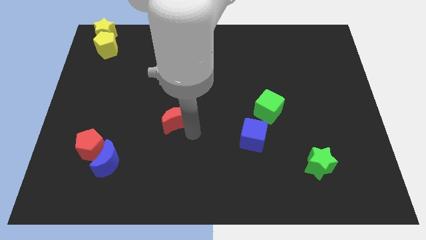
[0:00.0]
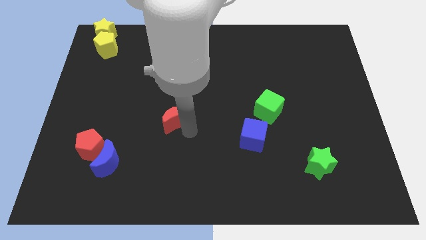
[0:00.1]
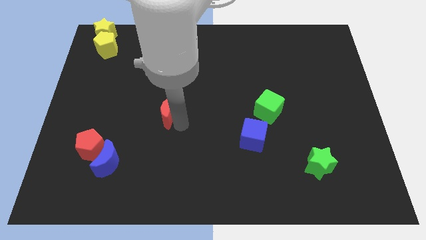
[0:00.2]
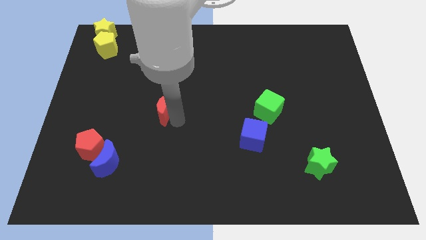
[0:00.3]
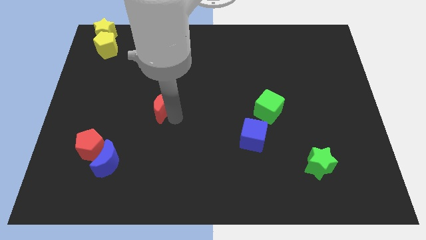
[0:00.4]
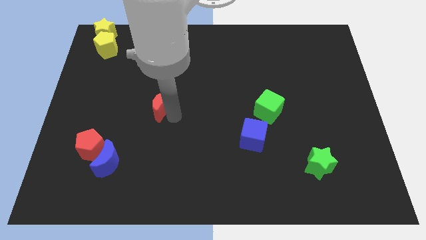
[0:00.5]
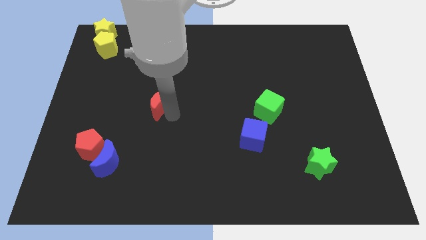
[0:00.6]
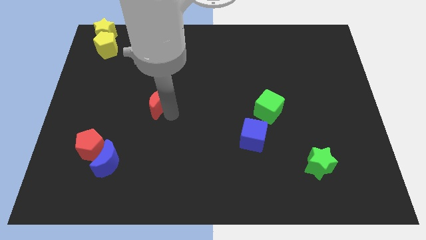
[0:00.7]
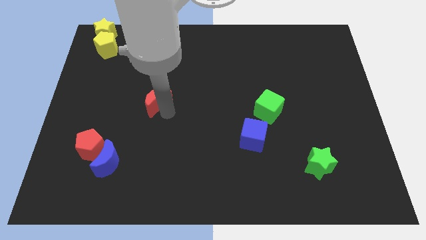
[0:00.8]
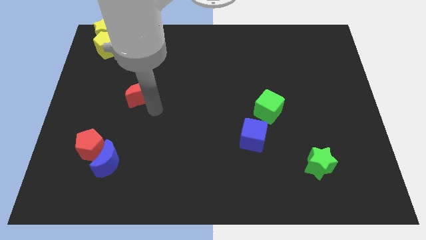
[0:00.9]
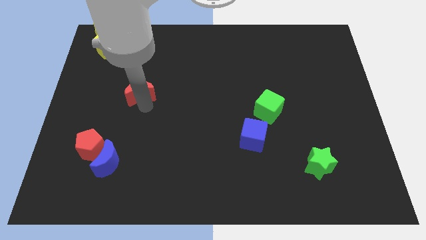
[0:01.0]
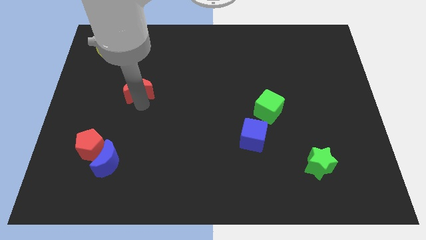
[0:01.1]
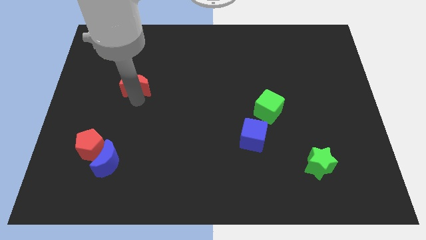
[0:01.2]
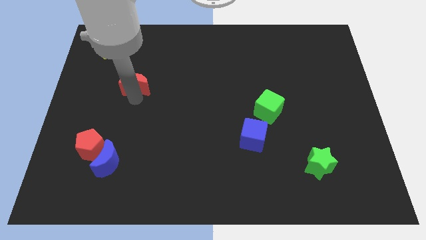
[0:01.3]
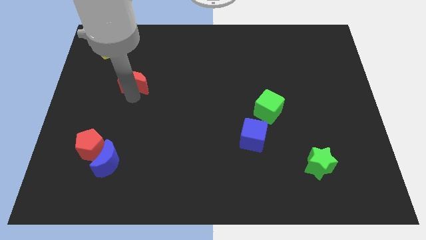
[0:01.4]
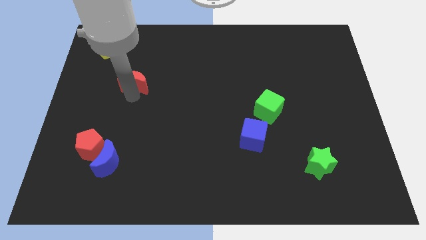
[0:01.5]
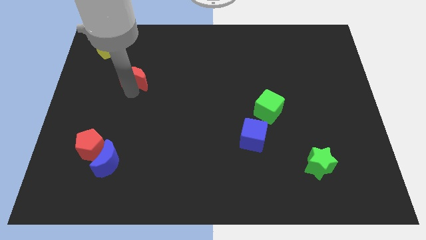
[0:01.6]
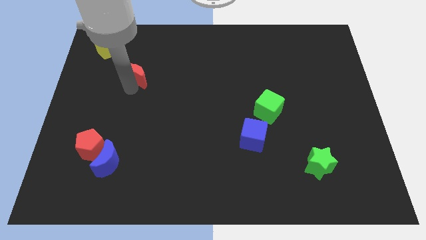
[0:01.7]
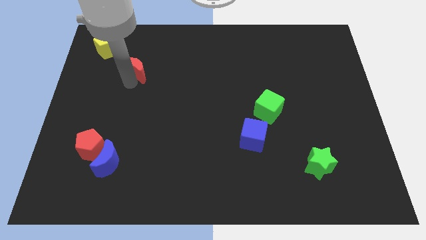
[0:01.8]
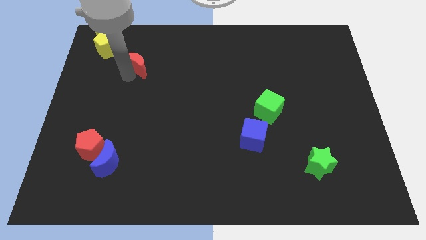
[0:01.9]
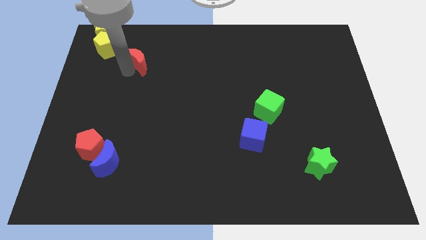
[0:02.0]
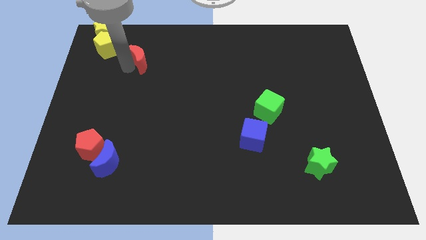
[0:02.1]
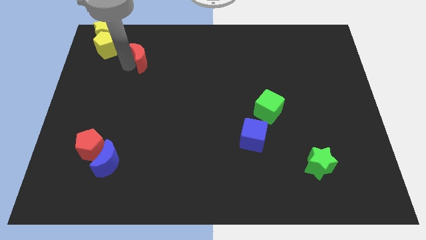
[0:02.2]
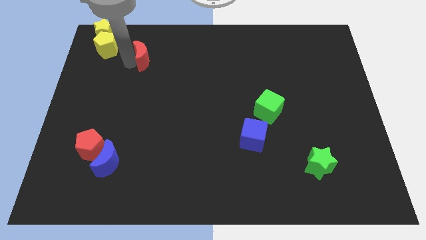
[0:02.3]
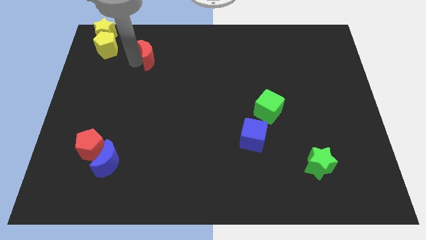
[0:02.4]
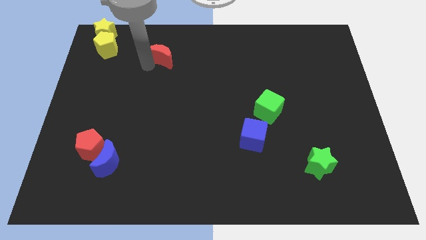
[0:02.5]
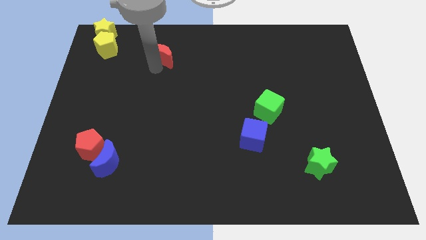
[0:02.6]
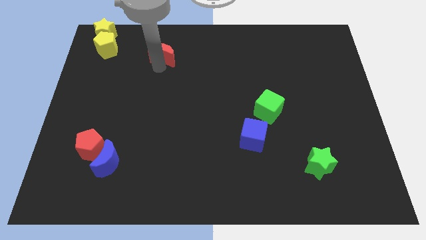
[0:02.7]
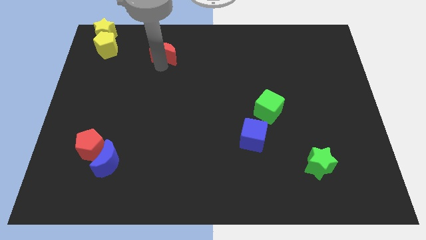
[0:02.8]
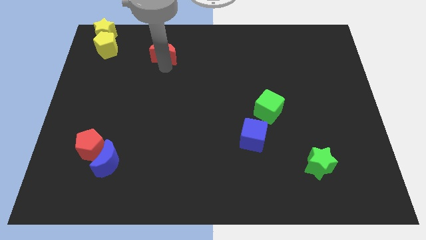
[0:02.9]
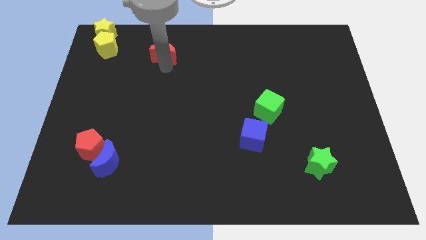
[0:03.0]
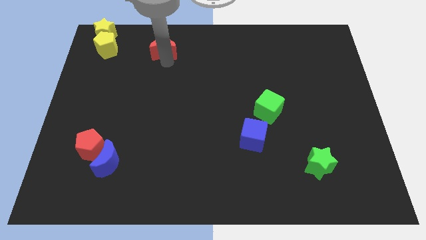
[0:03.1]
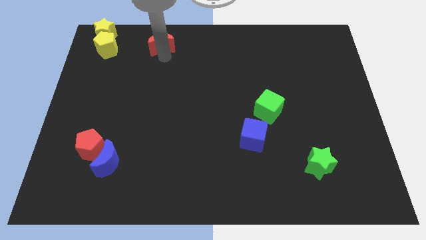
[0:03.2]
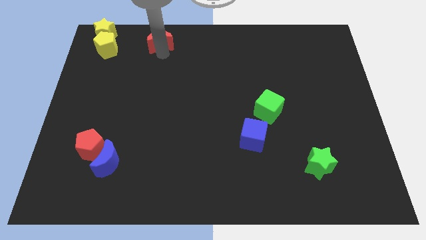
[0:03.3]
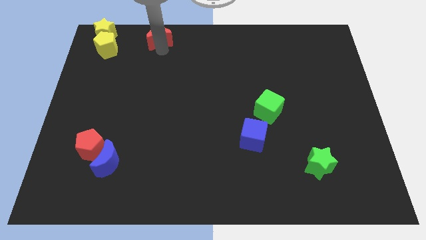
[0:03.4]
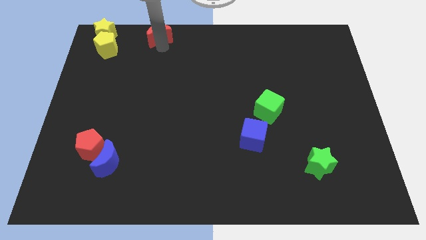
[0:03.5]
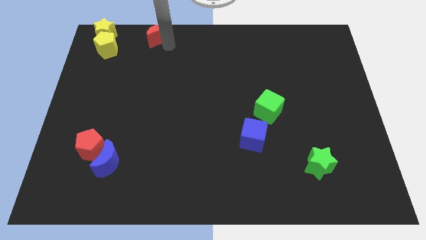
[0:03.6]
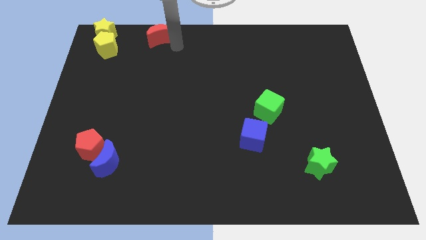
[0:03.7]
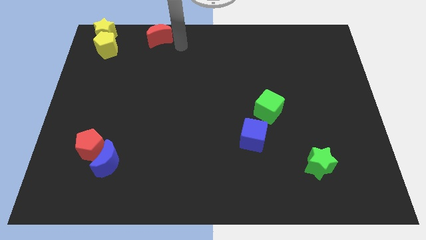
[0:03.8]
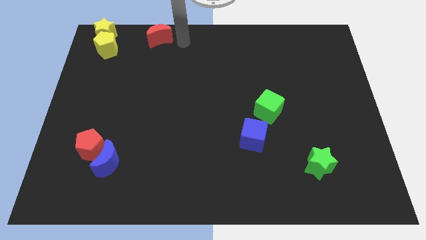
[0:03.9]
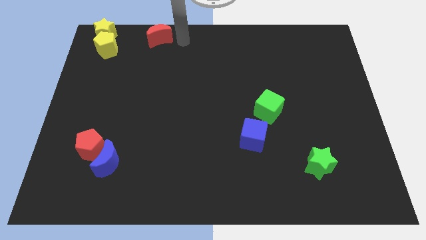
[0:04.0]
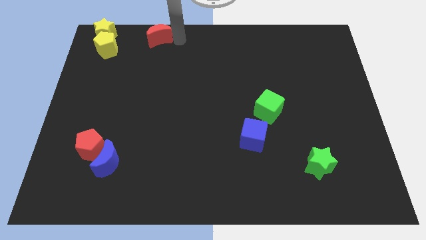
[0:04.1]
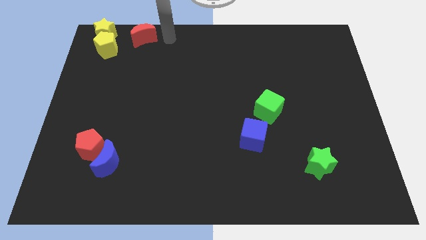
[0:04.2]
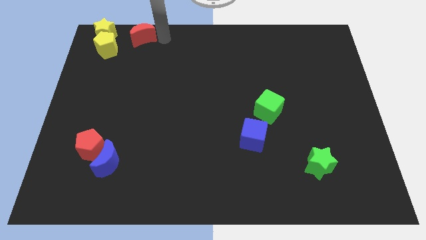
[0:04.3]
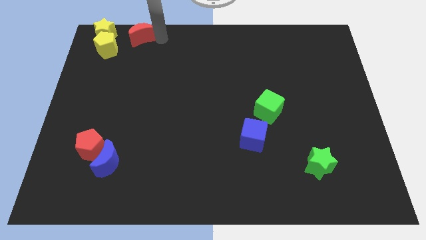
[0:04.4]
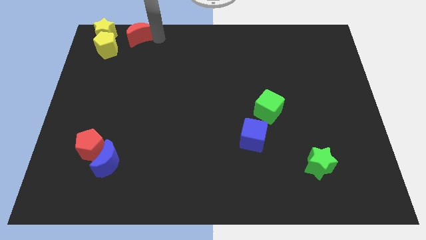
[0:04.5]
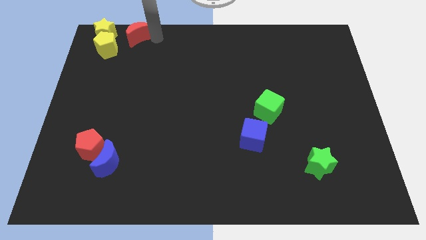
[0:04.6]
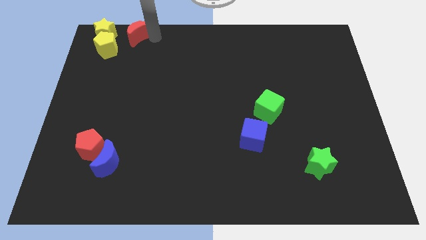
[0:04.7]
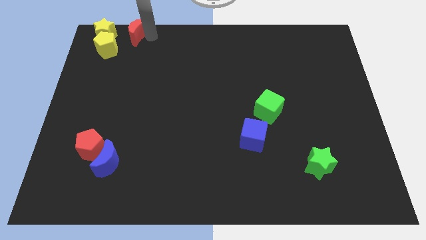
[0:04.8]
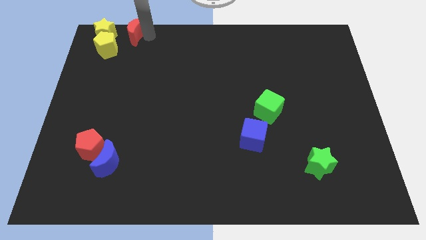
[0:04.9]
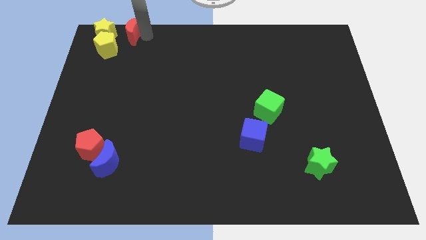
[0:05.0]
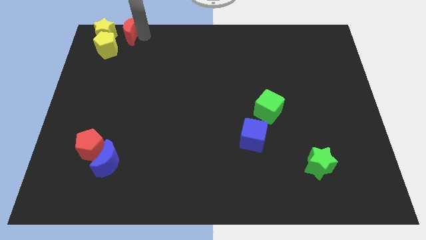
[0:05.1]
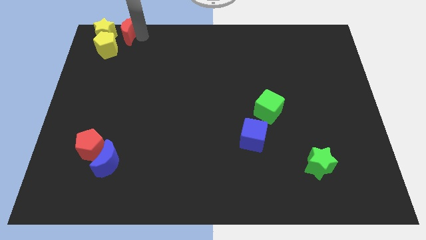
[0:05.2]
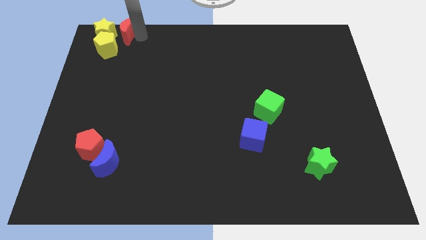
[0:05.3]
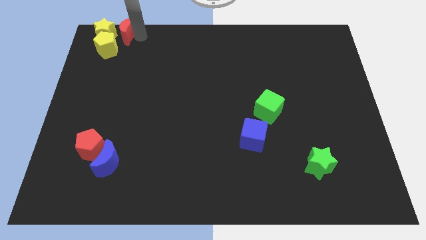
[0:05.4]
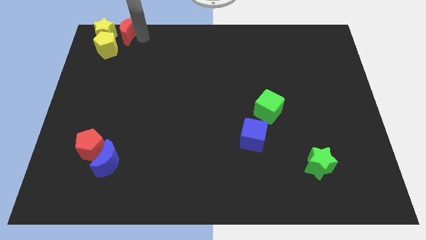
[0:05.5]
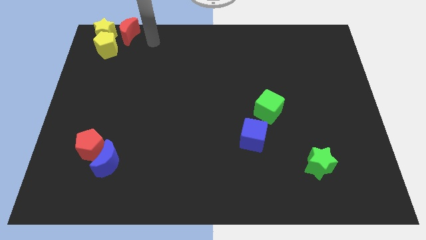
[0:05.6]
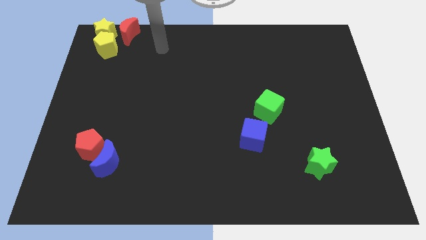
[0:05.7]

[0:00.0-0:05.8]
push the red crecent to the right side of the yellow star

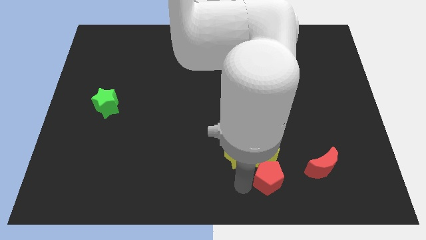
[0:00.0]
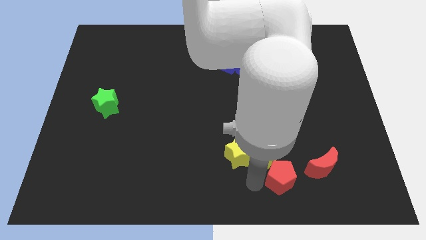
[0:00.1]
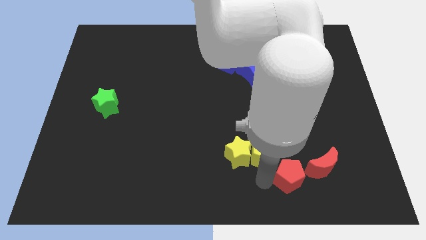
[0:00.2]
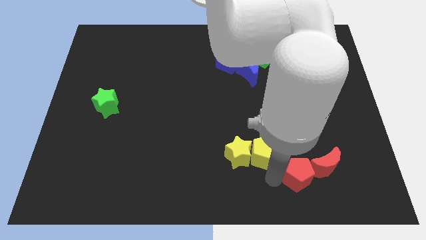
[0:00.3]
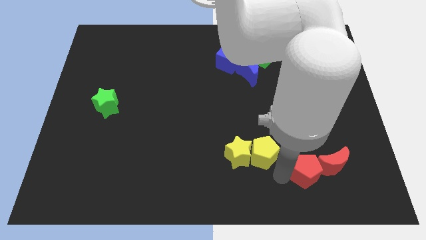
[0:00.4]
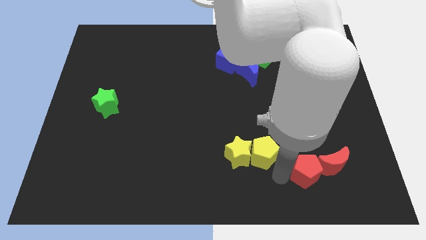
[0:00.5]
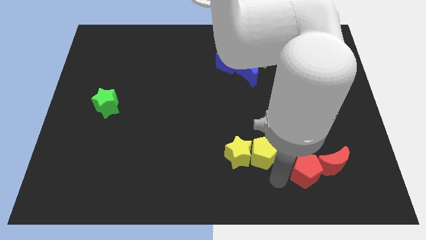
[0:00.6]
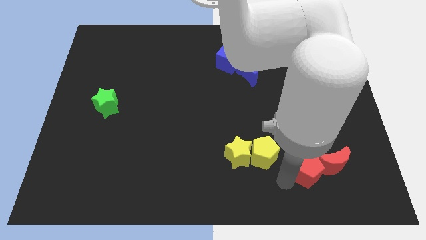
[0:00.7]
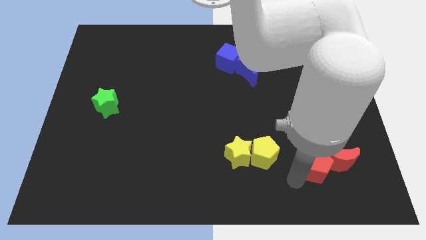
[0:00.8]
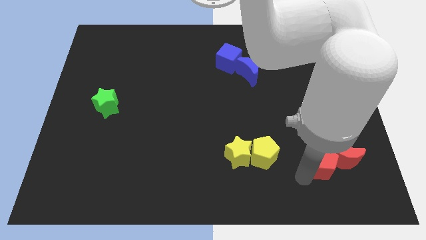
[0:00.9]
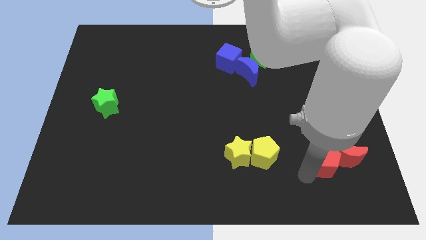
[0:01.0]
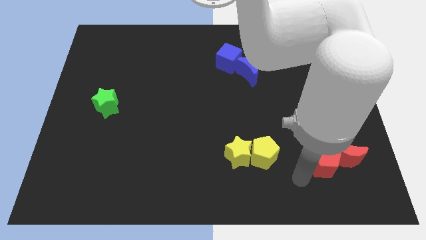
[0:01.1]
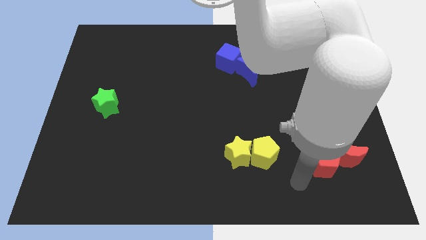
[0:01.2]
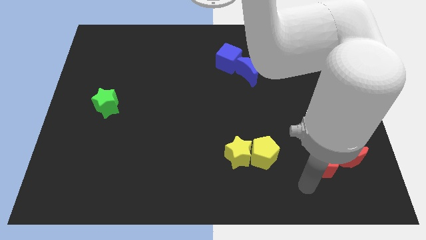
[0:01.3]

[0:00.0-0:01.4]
move red pentagon and red crescent to the bottom right side of the table

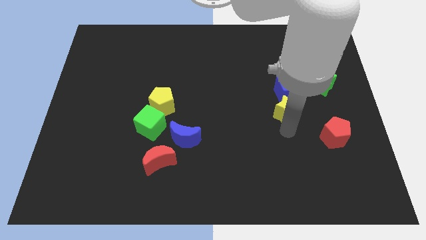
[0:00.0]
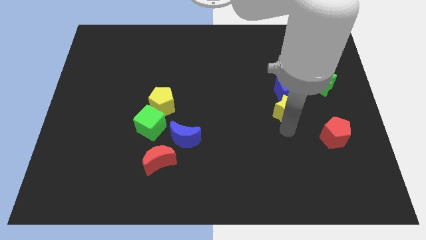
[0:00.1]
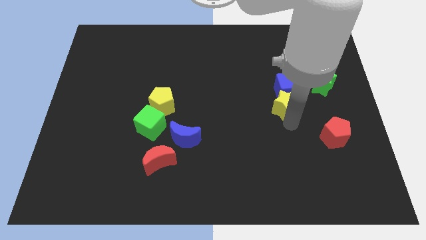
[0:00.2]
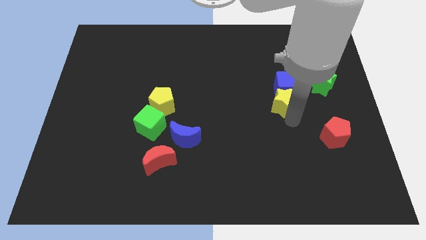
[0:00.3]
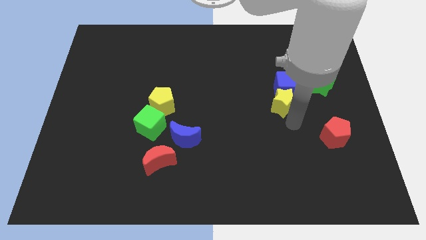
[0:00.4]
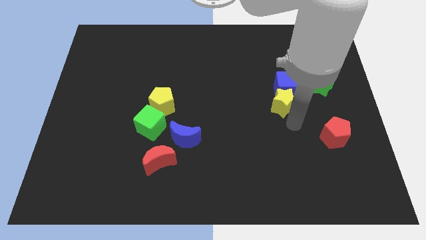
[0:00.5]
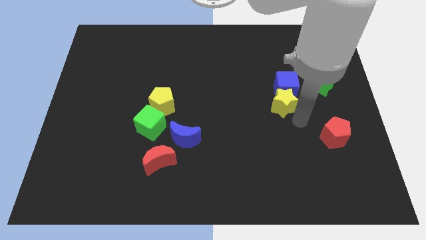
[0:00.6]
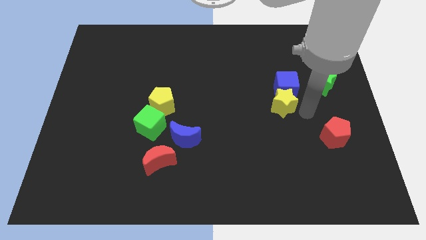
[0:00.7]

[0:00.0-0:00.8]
touch the bottom of yellow star

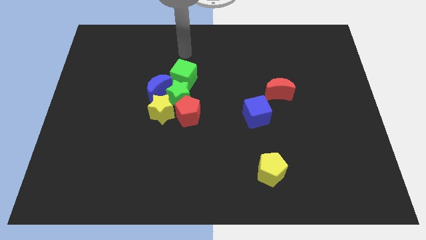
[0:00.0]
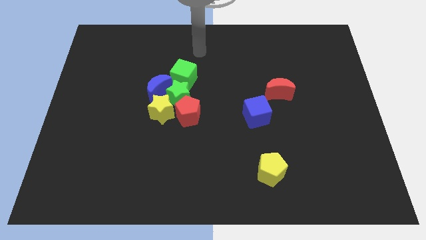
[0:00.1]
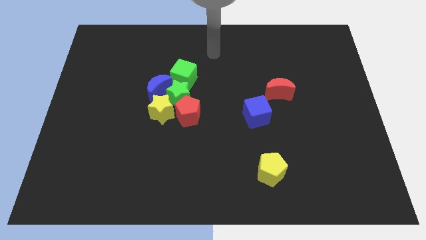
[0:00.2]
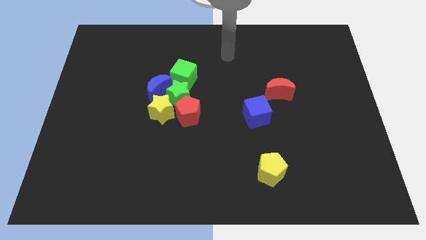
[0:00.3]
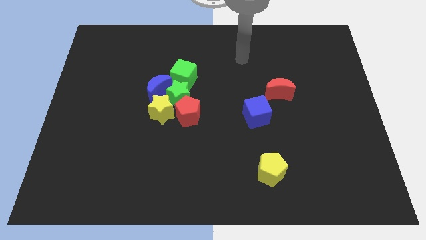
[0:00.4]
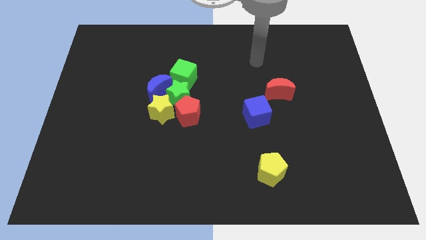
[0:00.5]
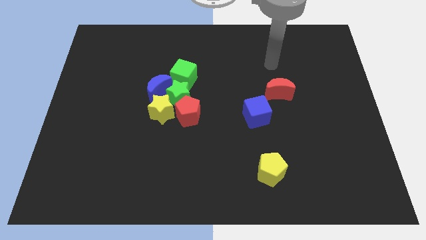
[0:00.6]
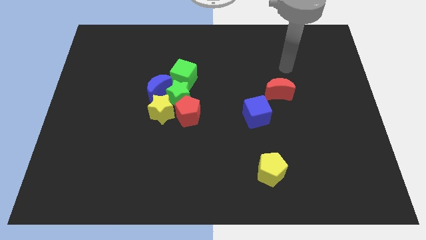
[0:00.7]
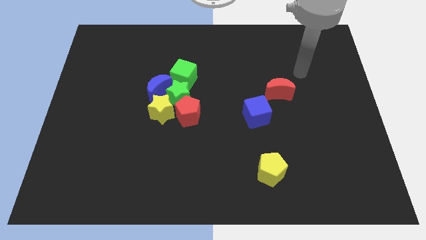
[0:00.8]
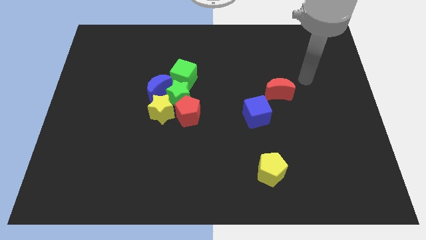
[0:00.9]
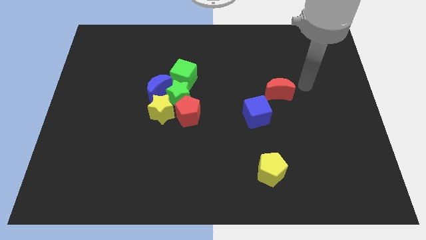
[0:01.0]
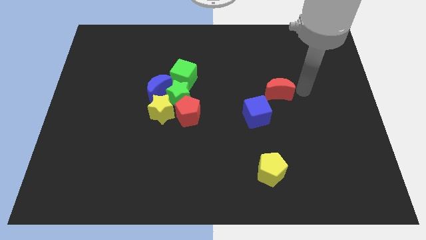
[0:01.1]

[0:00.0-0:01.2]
place your arm to the right of the red moon
